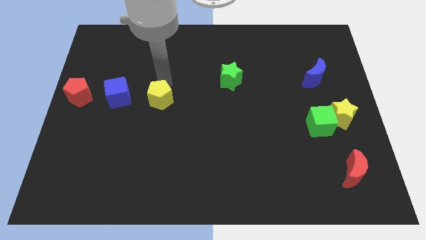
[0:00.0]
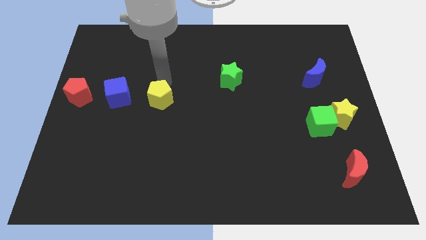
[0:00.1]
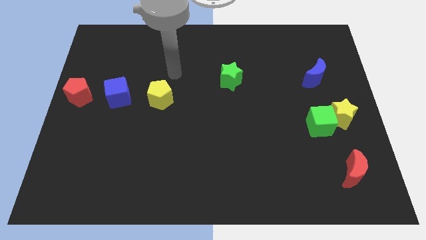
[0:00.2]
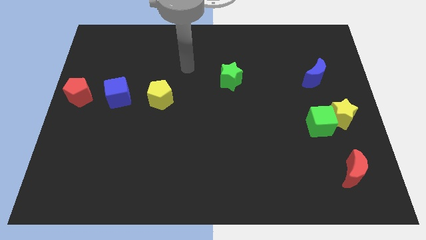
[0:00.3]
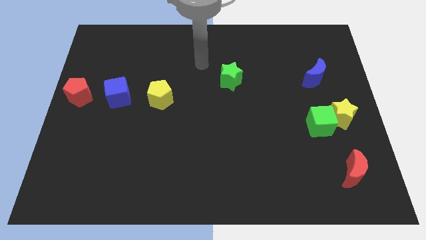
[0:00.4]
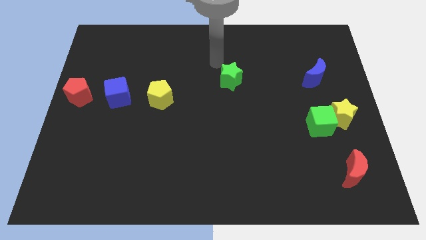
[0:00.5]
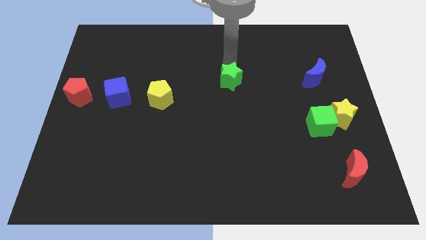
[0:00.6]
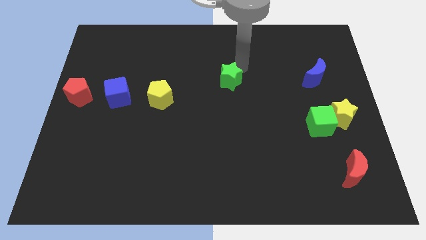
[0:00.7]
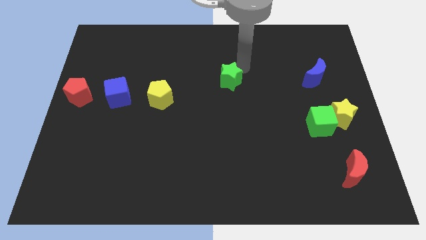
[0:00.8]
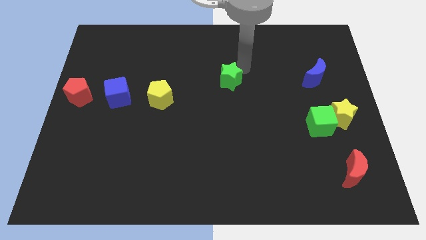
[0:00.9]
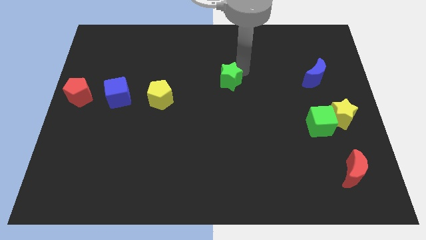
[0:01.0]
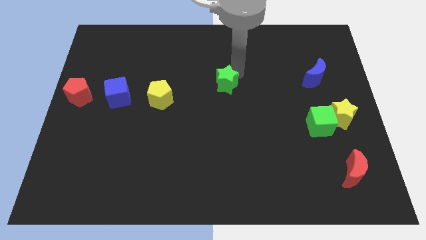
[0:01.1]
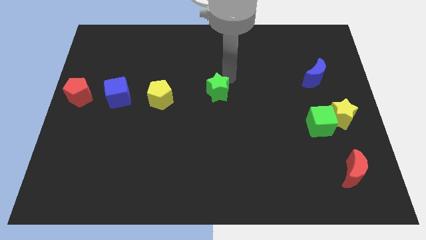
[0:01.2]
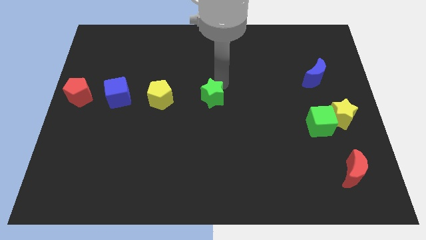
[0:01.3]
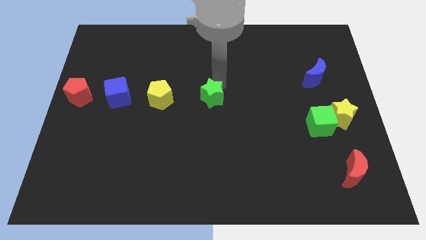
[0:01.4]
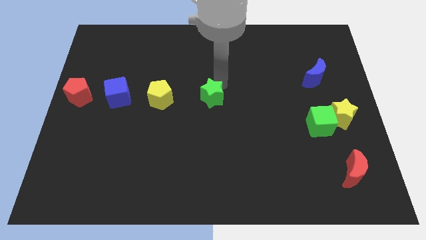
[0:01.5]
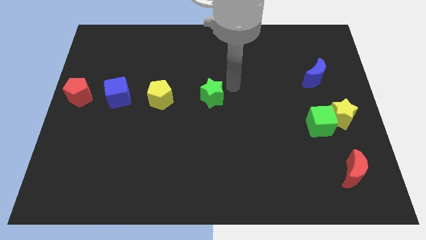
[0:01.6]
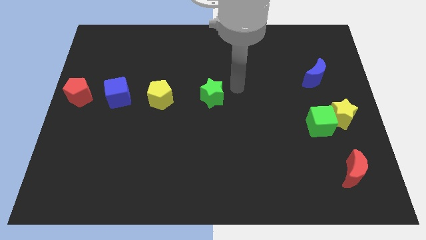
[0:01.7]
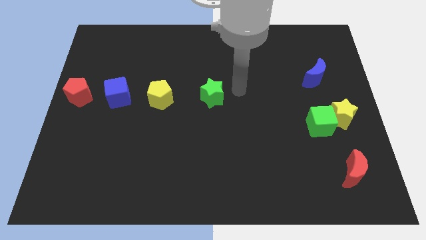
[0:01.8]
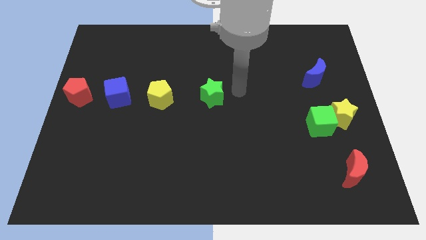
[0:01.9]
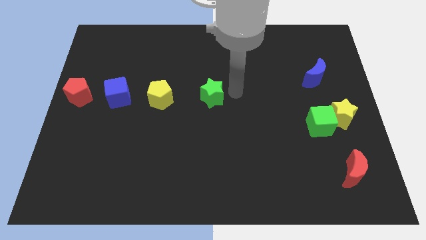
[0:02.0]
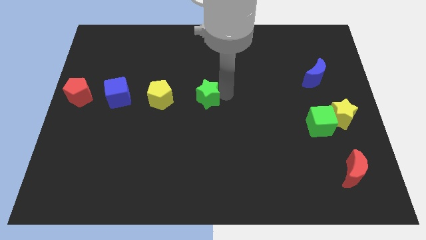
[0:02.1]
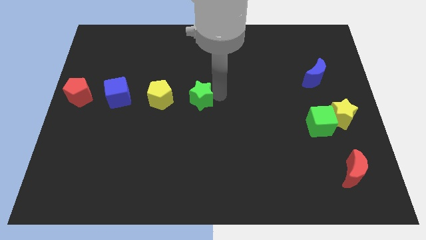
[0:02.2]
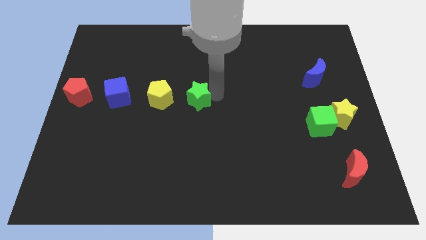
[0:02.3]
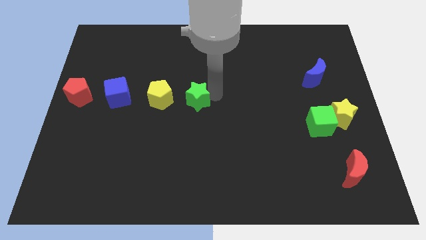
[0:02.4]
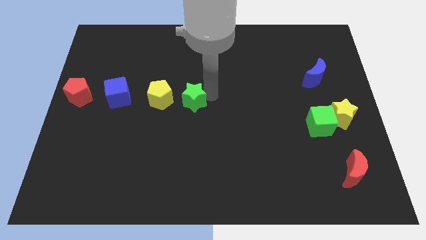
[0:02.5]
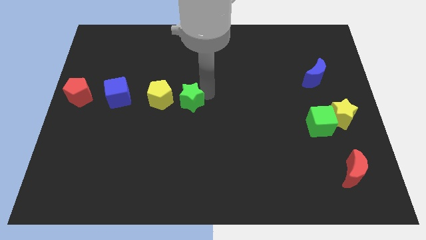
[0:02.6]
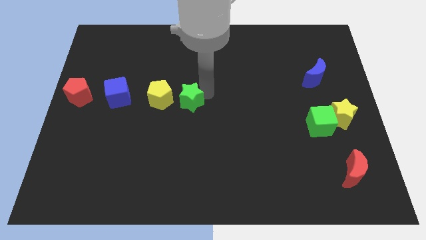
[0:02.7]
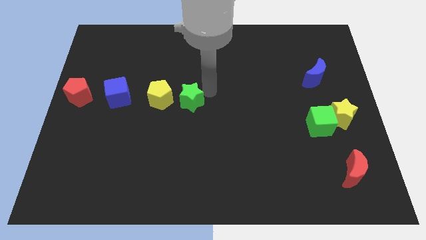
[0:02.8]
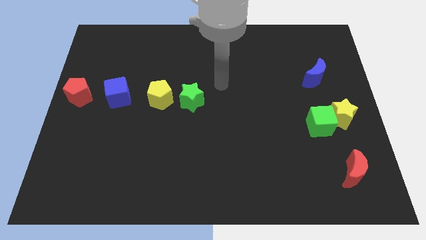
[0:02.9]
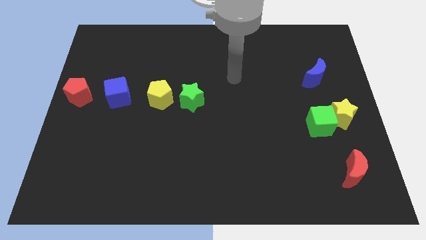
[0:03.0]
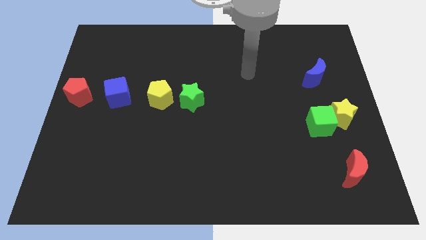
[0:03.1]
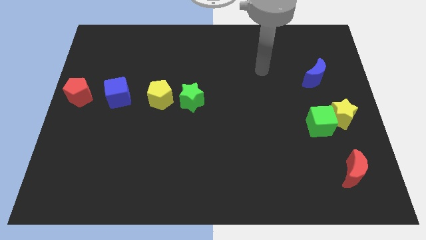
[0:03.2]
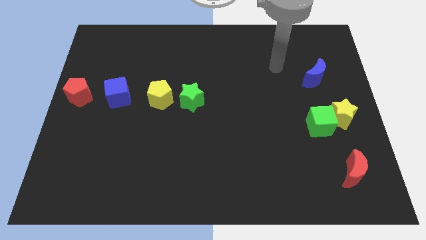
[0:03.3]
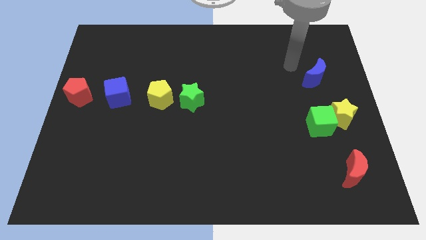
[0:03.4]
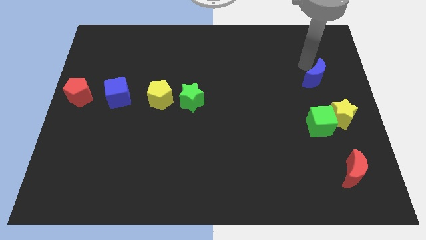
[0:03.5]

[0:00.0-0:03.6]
place green star to the right of yellow pentagon

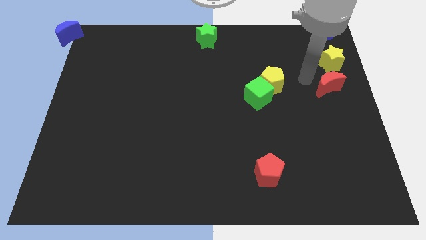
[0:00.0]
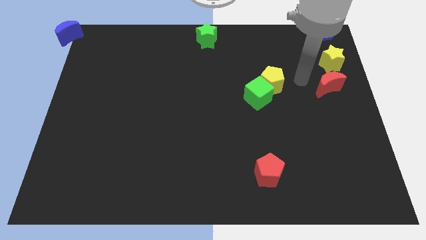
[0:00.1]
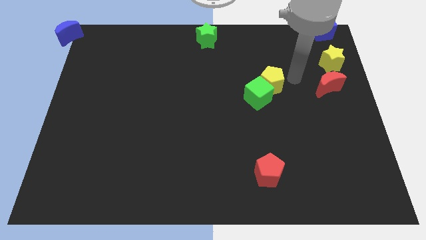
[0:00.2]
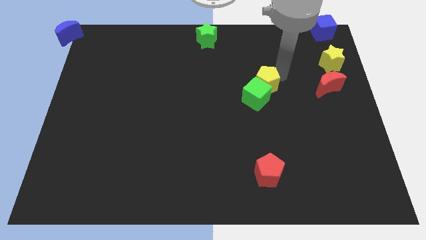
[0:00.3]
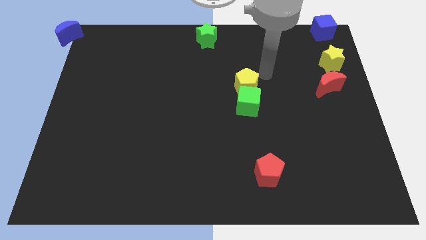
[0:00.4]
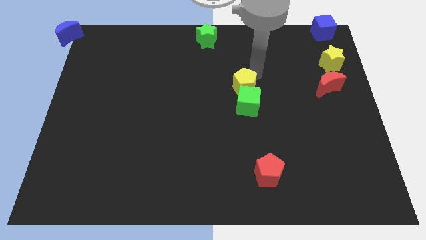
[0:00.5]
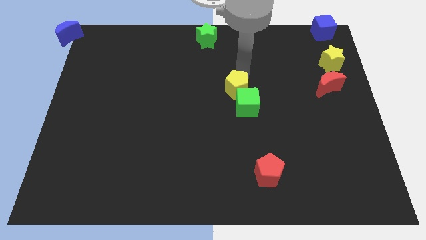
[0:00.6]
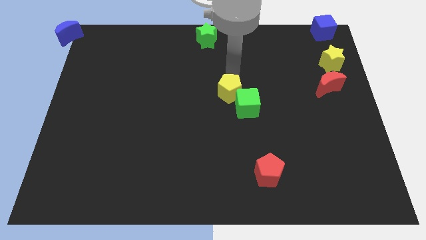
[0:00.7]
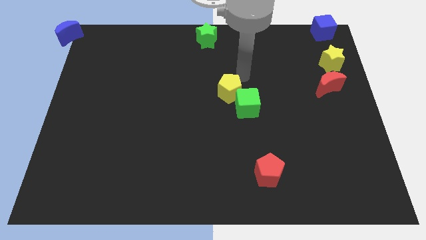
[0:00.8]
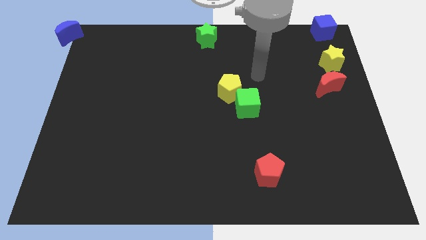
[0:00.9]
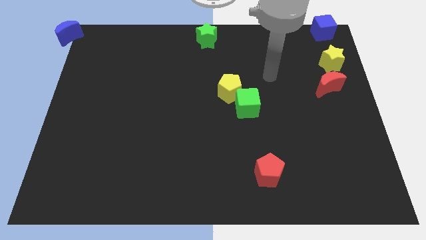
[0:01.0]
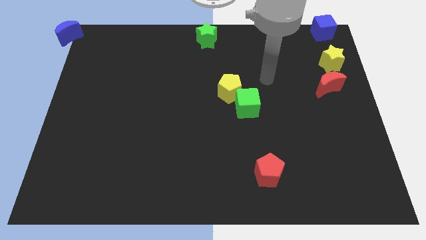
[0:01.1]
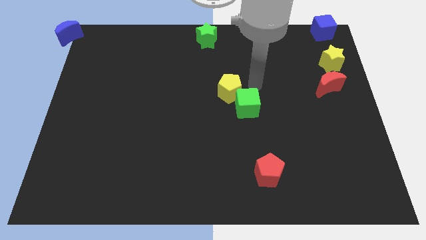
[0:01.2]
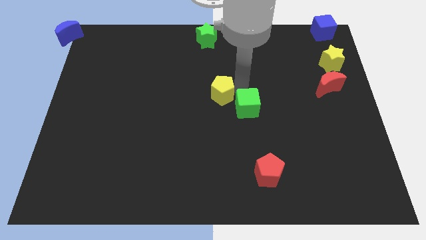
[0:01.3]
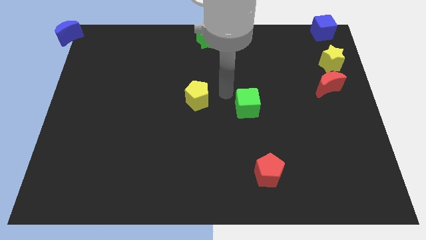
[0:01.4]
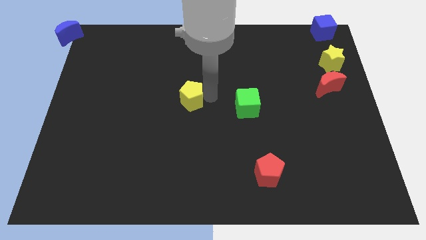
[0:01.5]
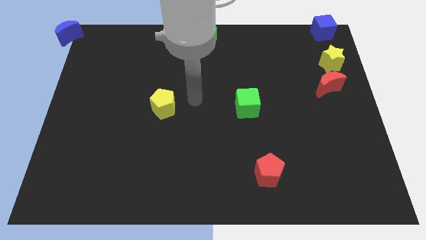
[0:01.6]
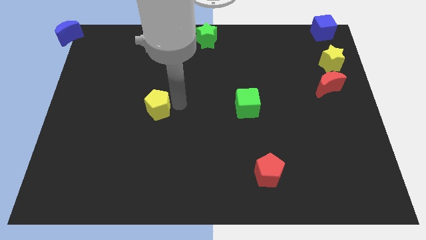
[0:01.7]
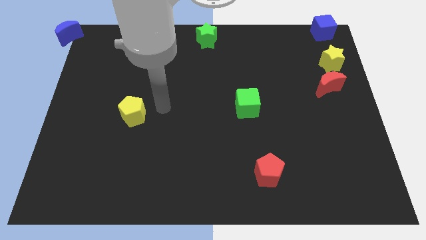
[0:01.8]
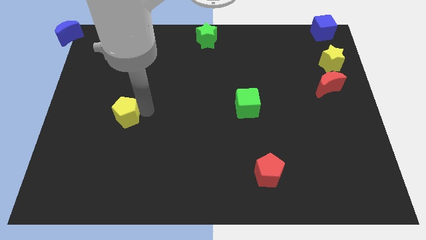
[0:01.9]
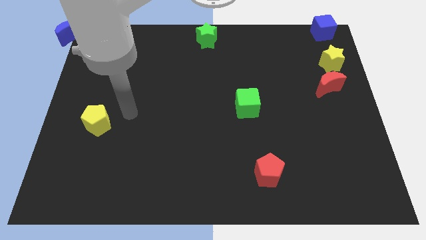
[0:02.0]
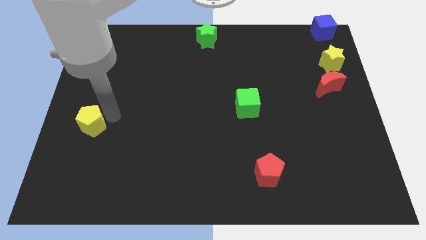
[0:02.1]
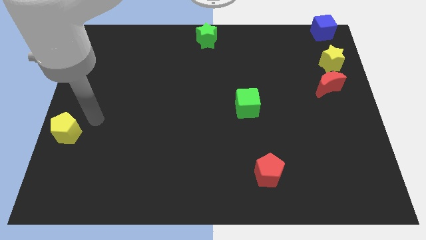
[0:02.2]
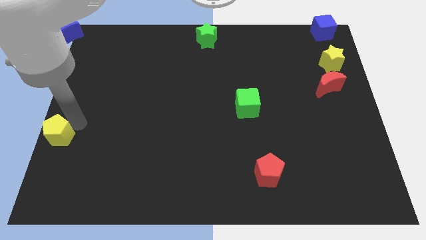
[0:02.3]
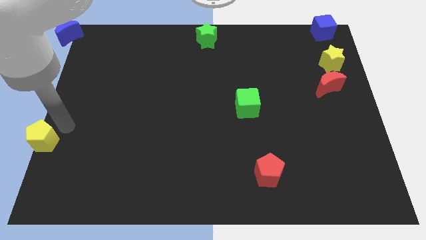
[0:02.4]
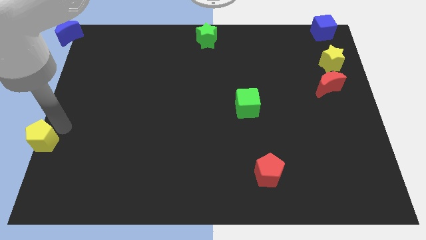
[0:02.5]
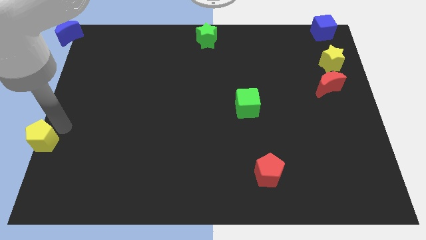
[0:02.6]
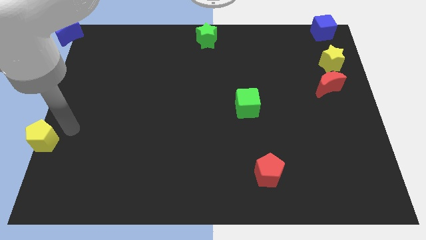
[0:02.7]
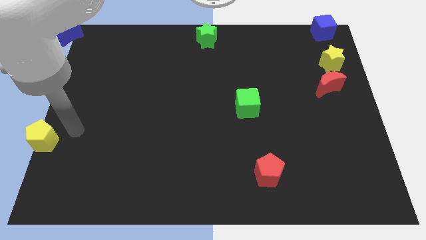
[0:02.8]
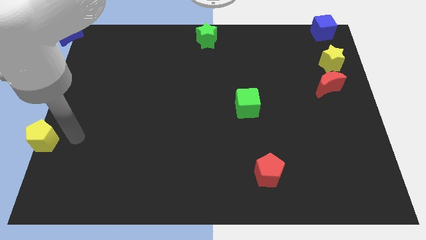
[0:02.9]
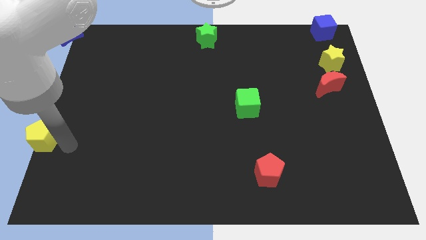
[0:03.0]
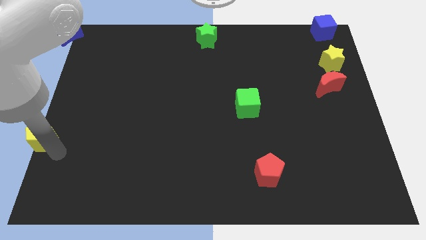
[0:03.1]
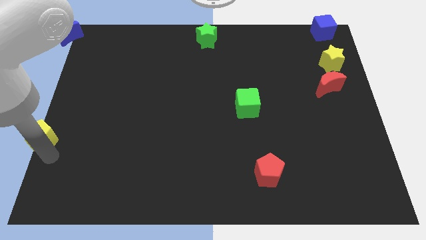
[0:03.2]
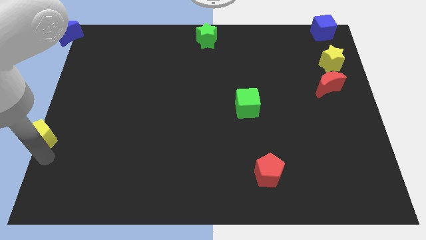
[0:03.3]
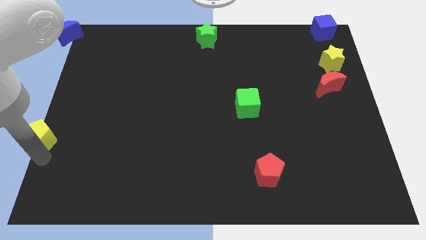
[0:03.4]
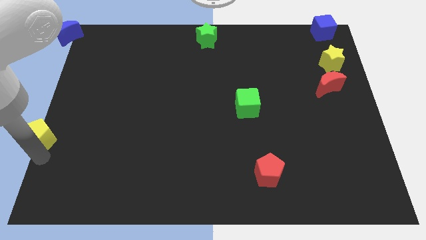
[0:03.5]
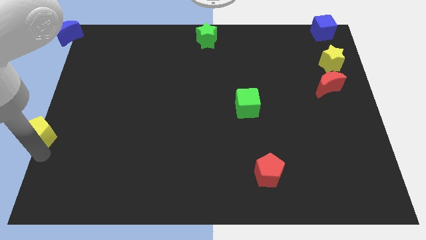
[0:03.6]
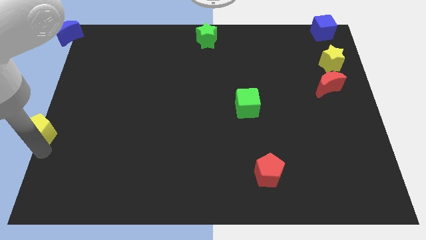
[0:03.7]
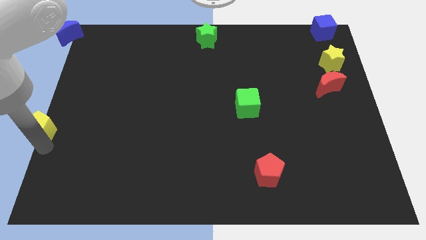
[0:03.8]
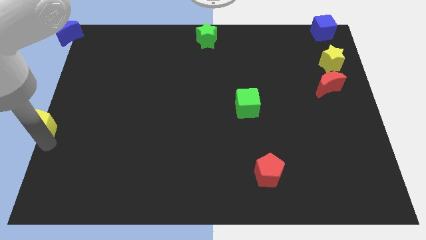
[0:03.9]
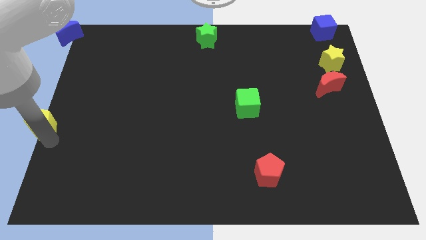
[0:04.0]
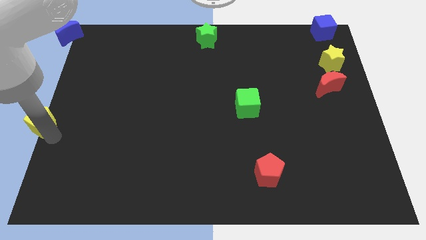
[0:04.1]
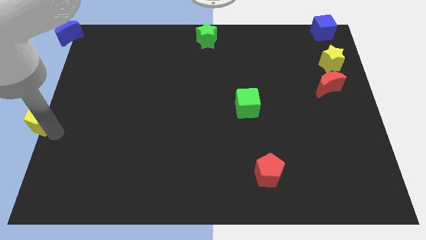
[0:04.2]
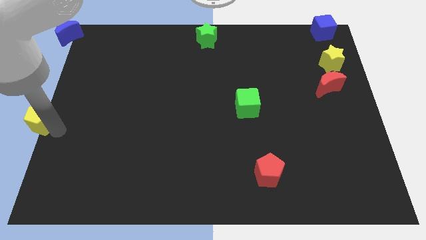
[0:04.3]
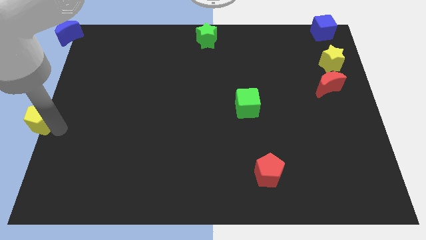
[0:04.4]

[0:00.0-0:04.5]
push the yellow pentagon to the center left of the board

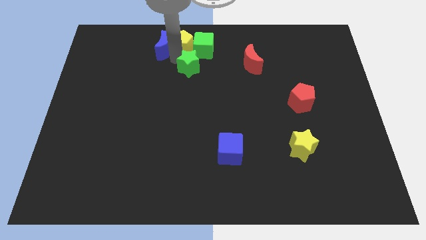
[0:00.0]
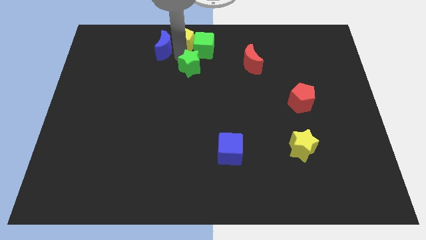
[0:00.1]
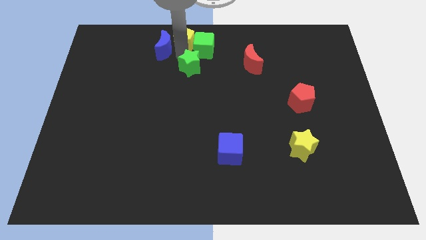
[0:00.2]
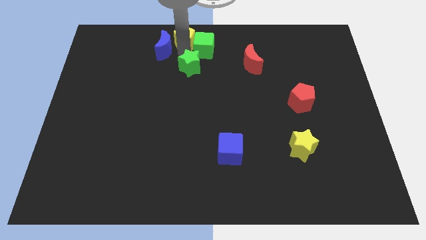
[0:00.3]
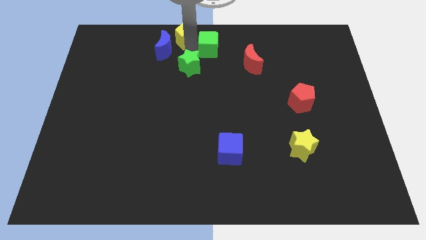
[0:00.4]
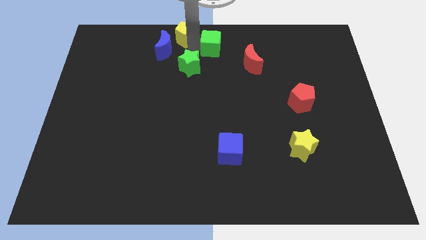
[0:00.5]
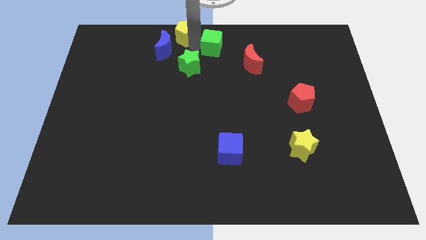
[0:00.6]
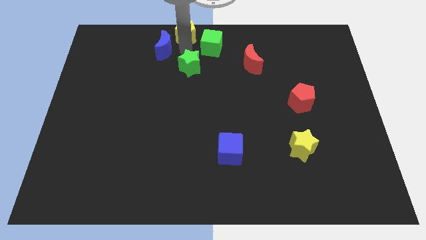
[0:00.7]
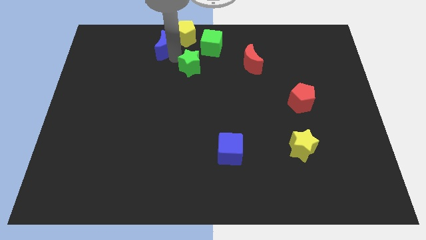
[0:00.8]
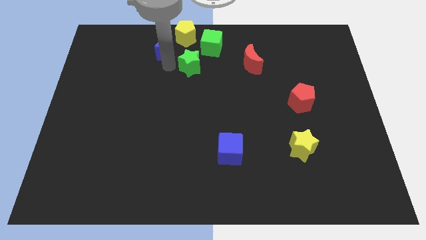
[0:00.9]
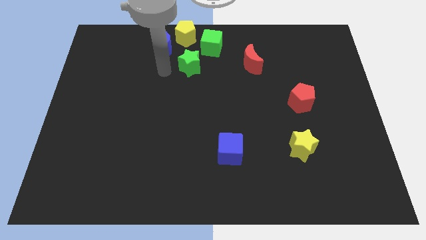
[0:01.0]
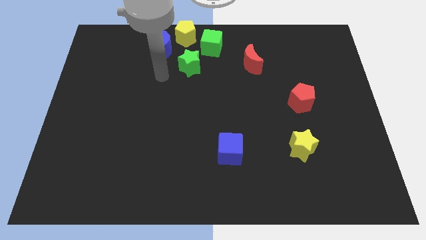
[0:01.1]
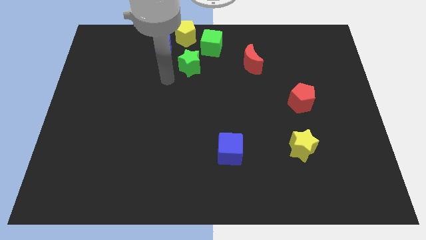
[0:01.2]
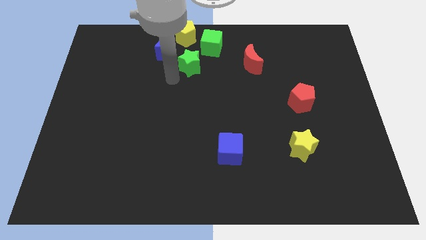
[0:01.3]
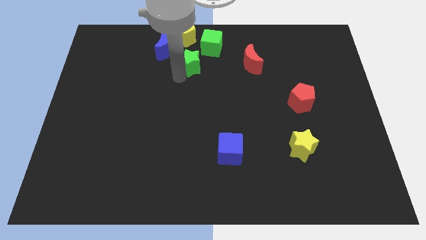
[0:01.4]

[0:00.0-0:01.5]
separate the yellow pentagon from the green star and the green cube
